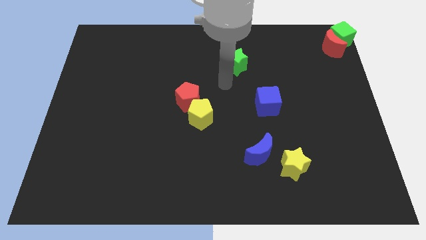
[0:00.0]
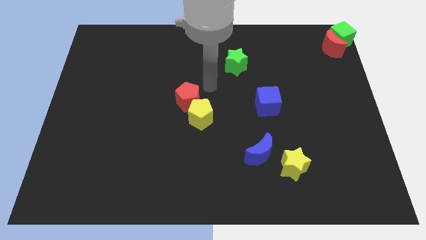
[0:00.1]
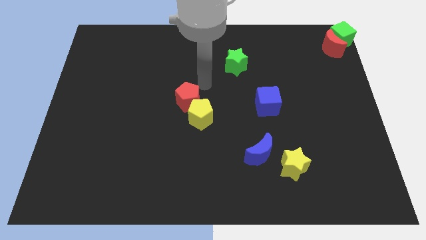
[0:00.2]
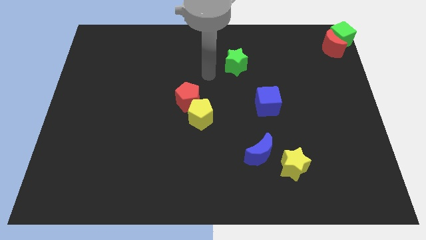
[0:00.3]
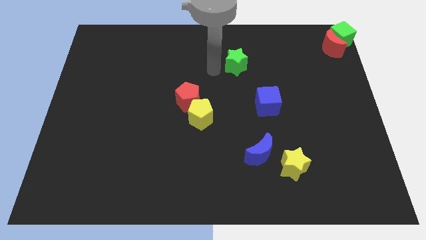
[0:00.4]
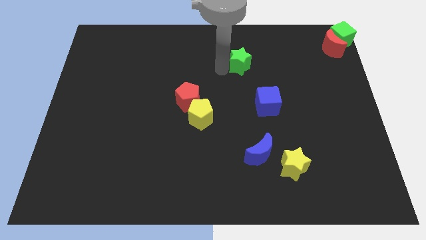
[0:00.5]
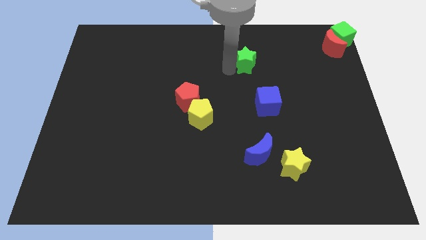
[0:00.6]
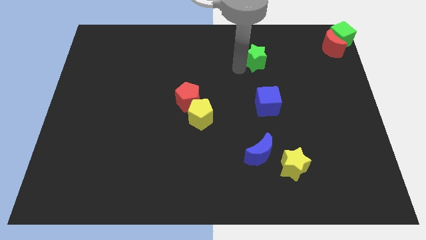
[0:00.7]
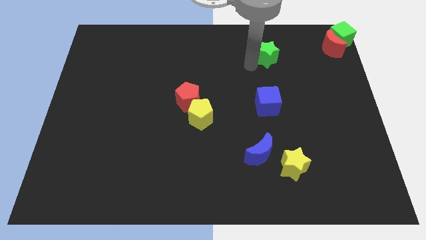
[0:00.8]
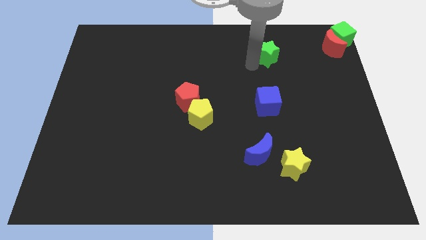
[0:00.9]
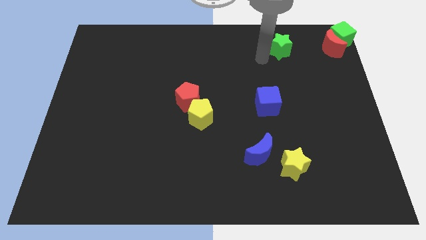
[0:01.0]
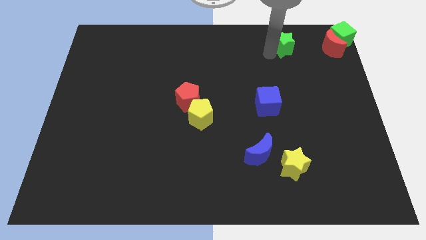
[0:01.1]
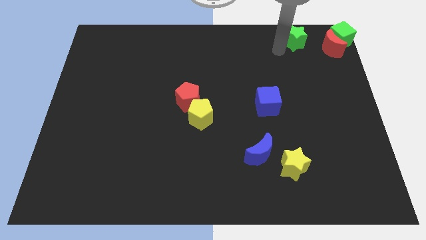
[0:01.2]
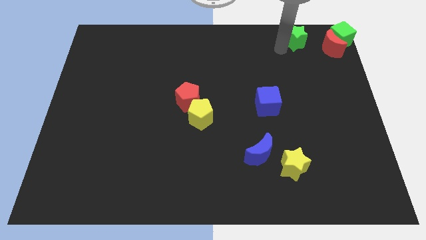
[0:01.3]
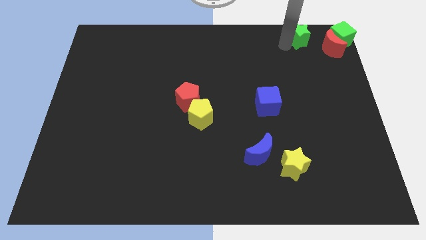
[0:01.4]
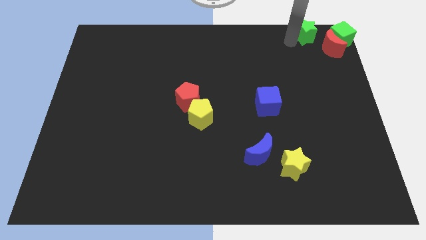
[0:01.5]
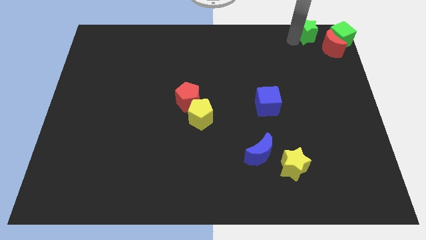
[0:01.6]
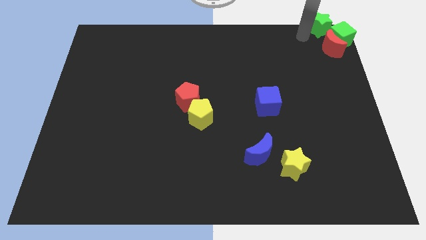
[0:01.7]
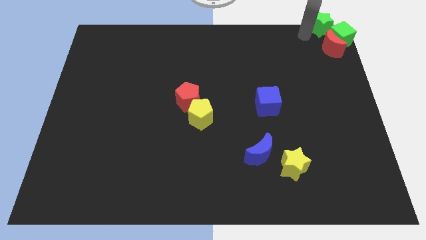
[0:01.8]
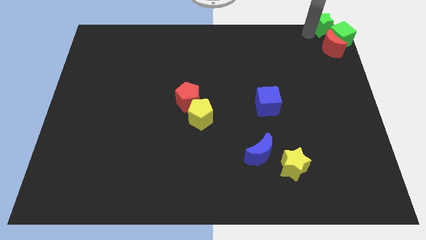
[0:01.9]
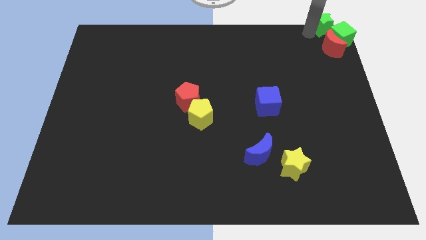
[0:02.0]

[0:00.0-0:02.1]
push the green star to the top right corner

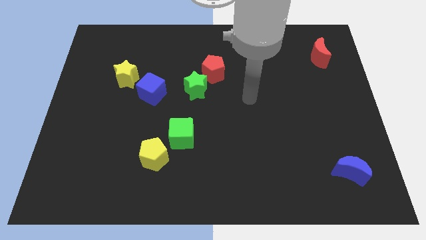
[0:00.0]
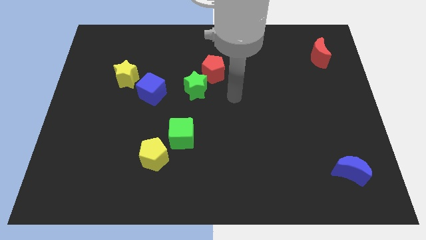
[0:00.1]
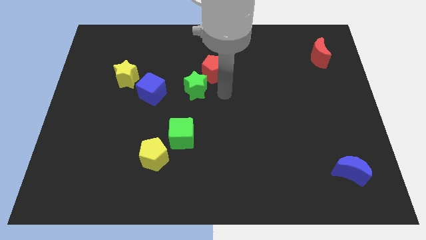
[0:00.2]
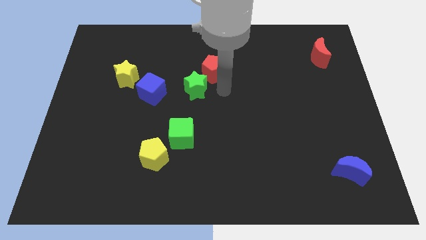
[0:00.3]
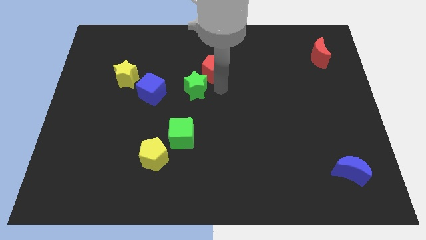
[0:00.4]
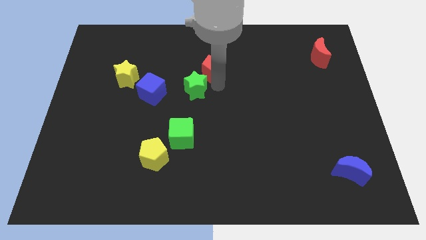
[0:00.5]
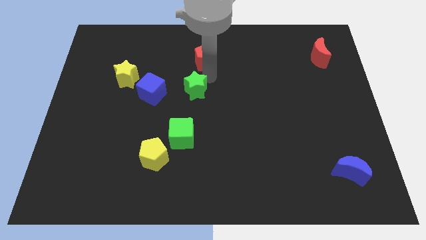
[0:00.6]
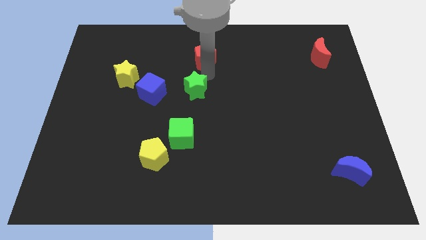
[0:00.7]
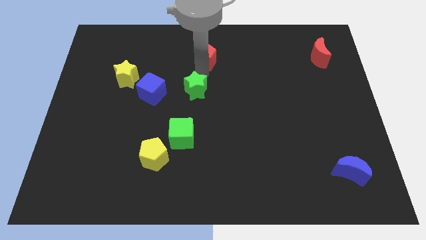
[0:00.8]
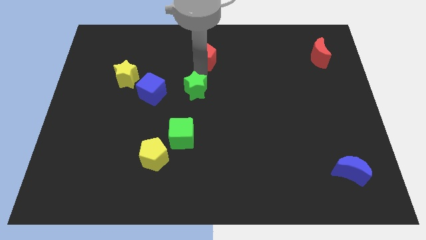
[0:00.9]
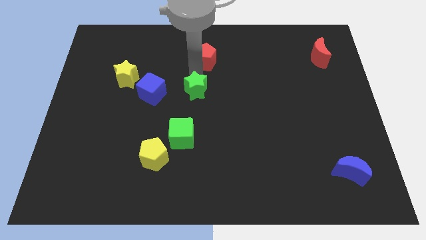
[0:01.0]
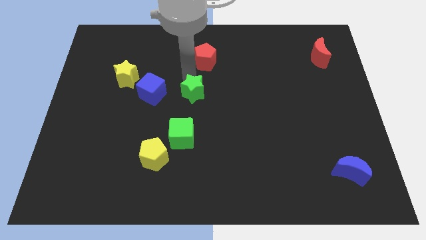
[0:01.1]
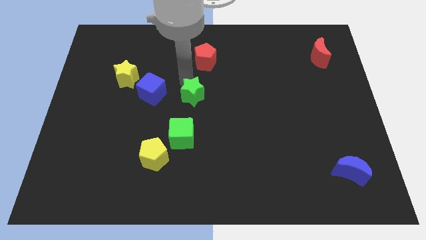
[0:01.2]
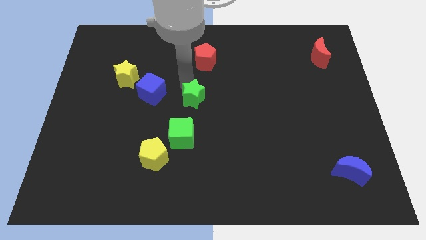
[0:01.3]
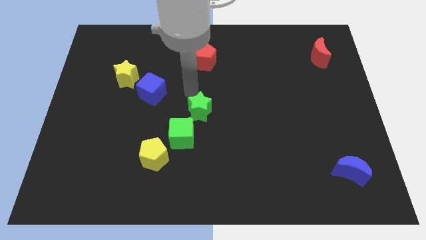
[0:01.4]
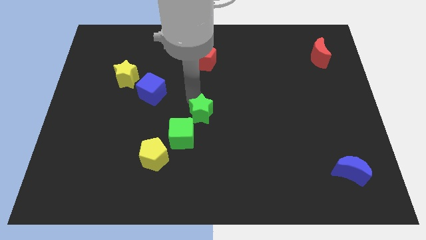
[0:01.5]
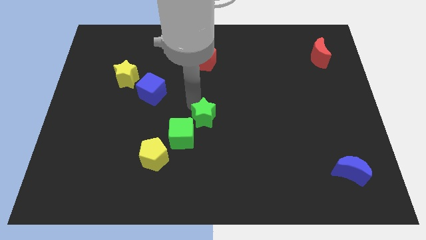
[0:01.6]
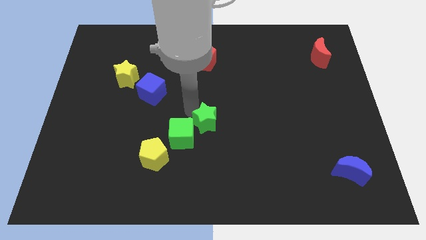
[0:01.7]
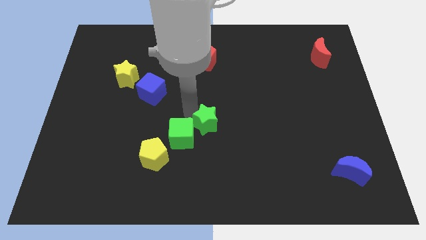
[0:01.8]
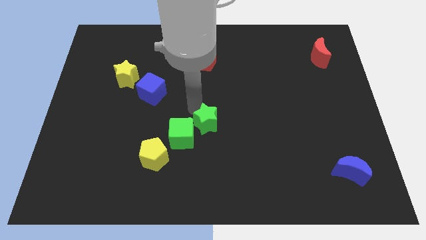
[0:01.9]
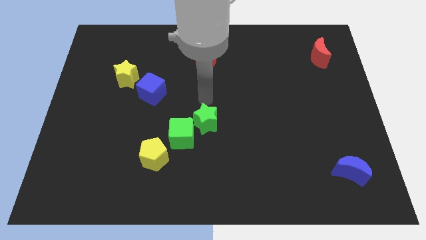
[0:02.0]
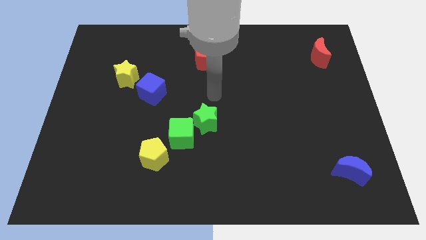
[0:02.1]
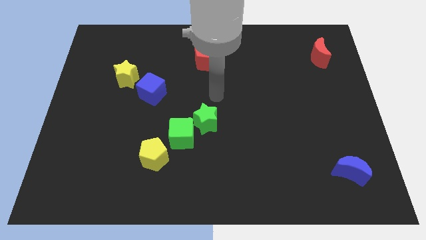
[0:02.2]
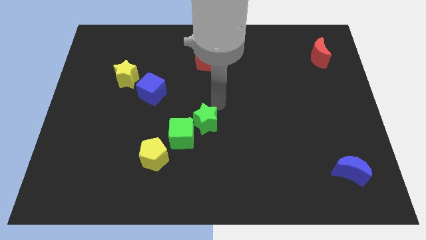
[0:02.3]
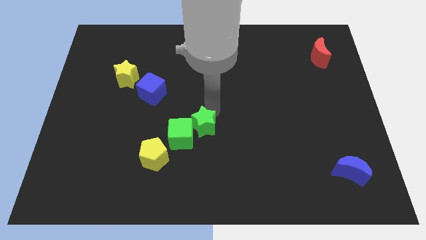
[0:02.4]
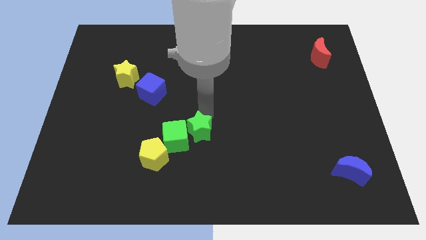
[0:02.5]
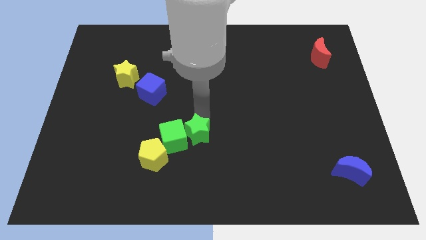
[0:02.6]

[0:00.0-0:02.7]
place the green star right to the green cube

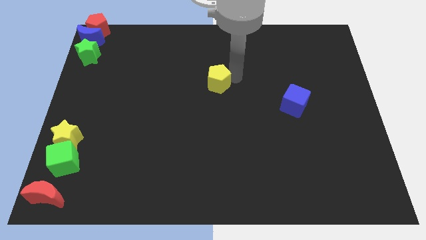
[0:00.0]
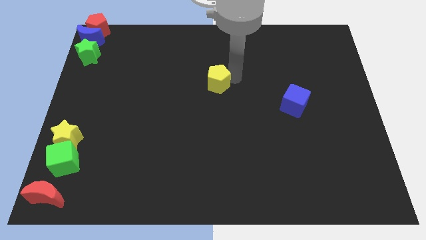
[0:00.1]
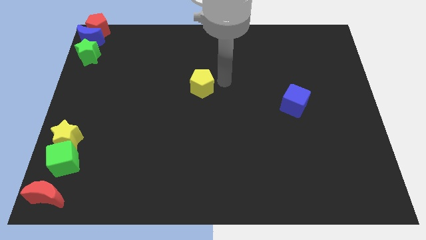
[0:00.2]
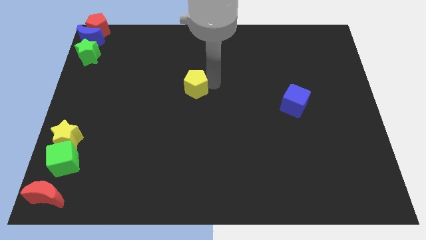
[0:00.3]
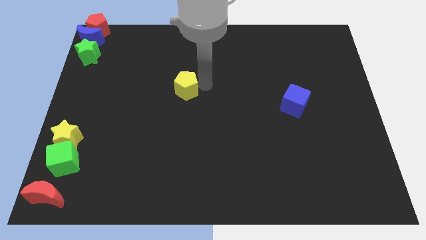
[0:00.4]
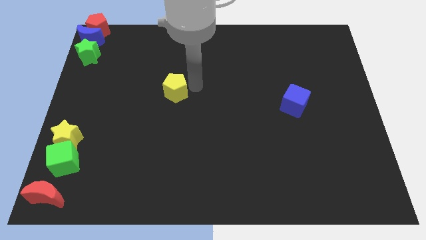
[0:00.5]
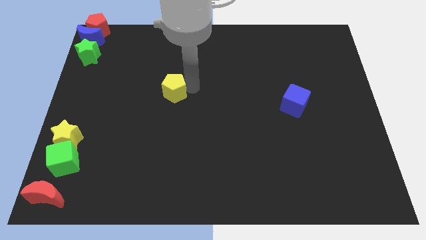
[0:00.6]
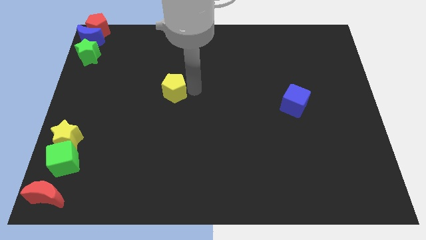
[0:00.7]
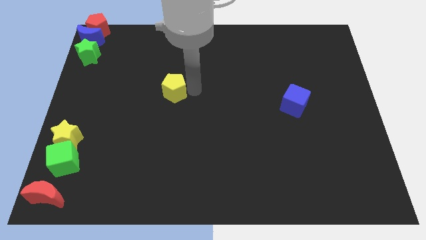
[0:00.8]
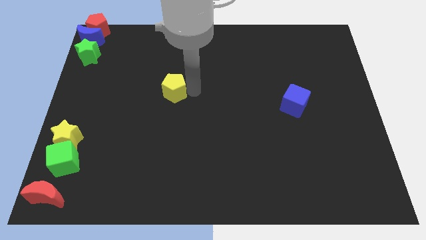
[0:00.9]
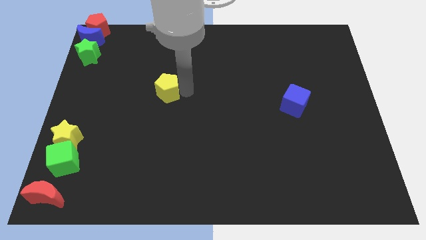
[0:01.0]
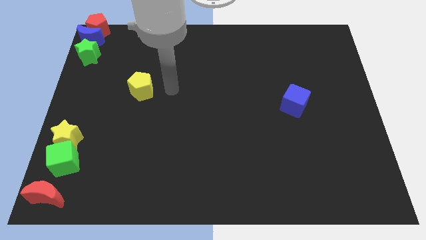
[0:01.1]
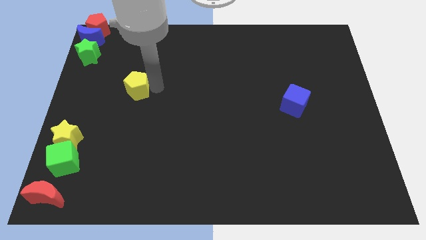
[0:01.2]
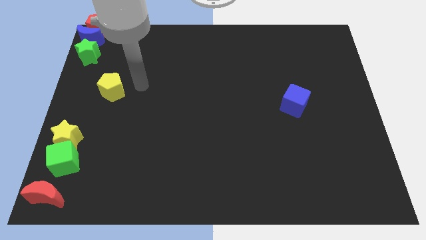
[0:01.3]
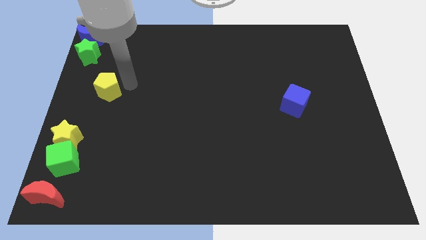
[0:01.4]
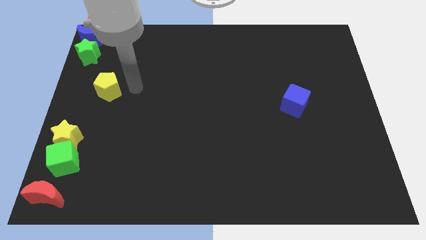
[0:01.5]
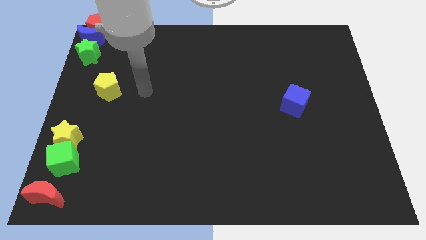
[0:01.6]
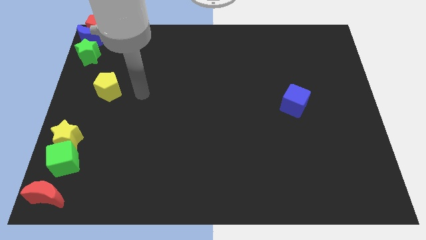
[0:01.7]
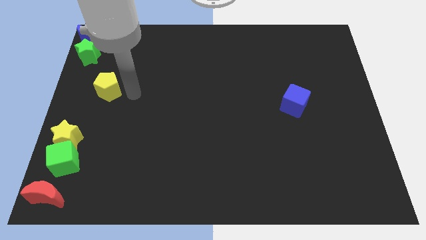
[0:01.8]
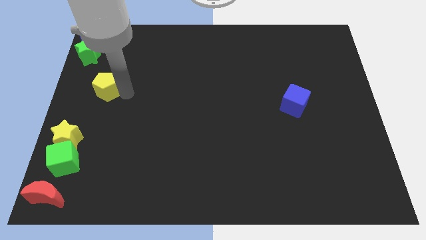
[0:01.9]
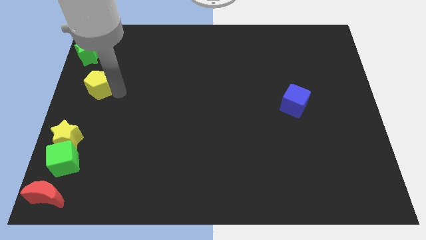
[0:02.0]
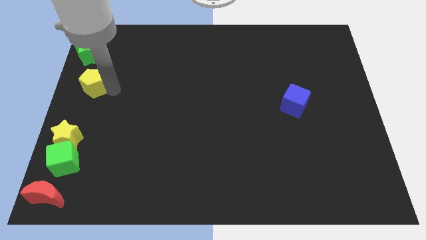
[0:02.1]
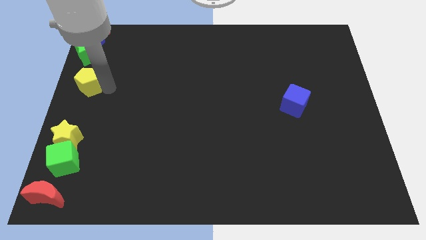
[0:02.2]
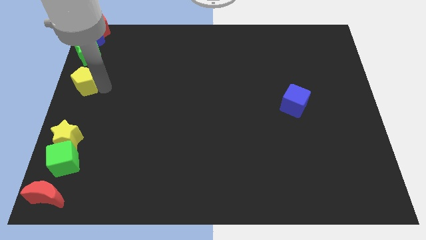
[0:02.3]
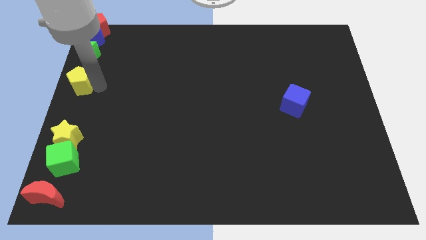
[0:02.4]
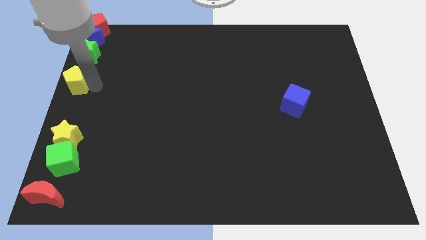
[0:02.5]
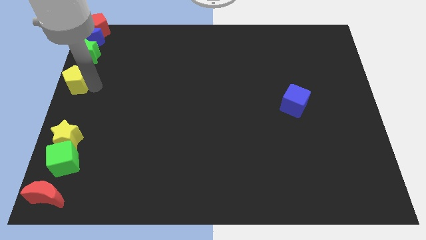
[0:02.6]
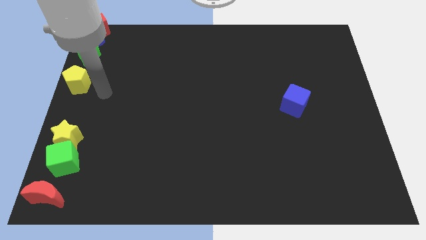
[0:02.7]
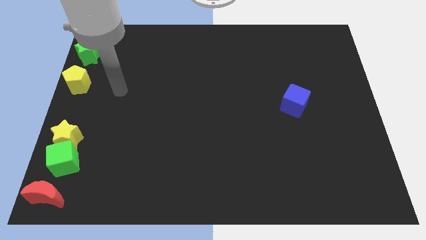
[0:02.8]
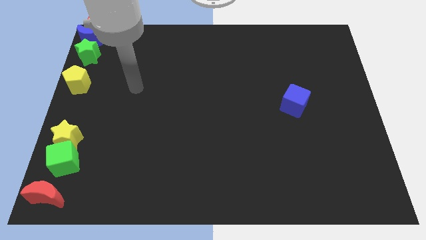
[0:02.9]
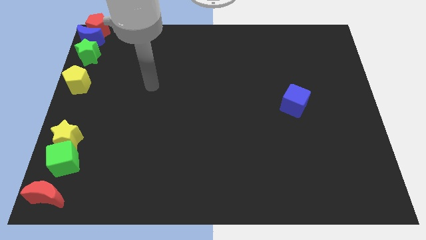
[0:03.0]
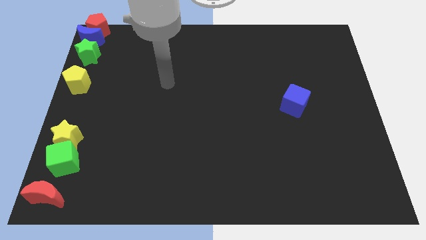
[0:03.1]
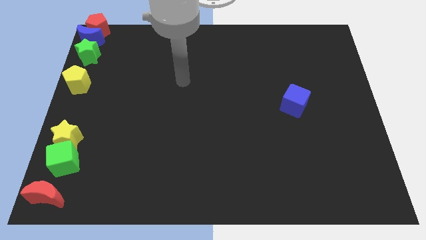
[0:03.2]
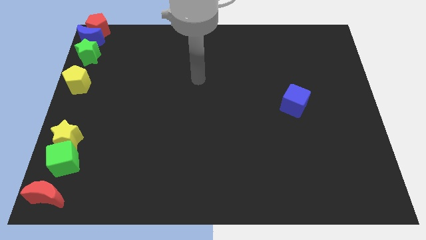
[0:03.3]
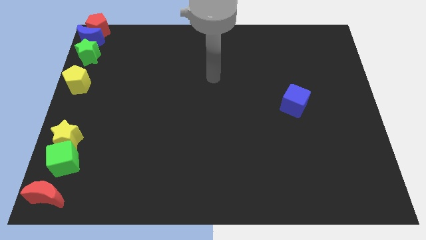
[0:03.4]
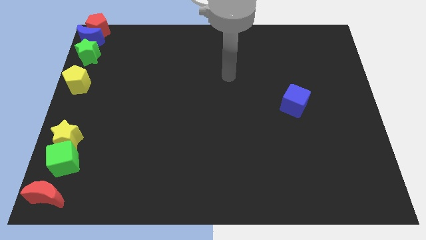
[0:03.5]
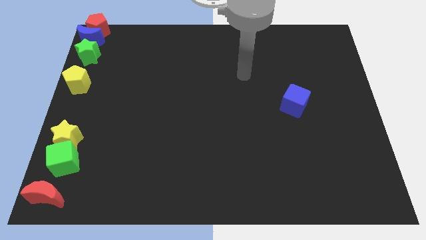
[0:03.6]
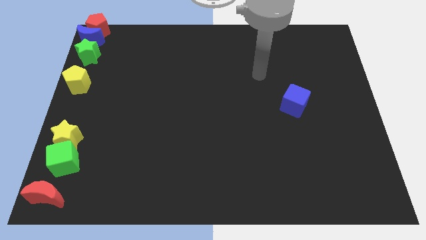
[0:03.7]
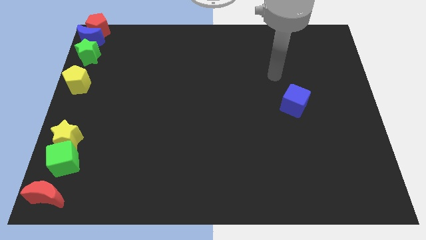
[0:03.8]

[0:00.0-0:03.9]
place the yellow pentagon below the green star

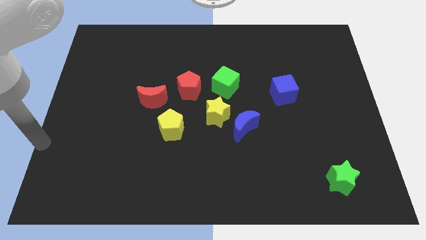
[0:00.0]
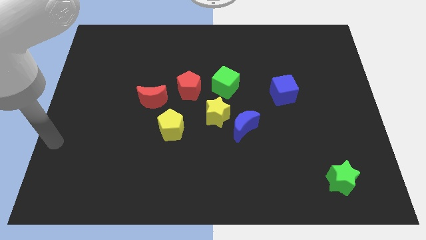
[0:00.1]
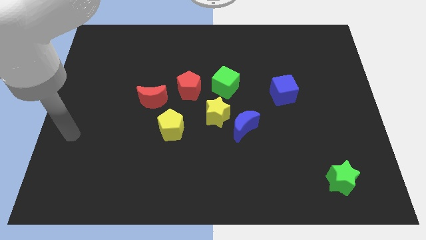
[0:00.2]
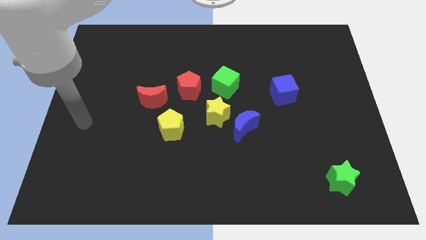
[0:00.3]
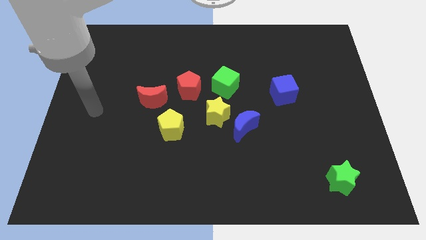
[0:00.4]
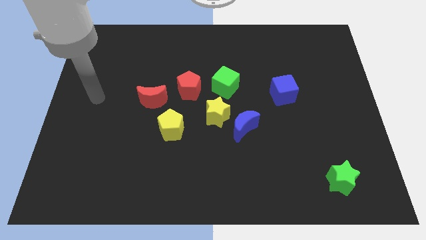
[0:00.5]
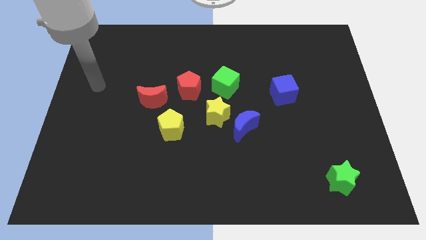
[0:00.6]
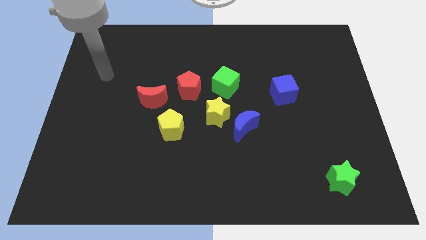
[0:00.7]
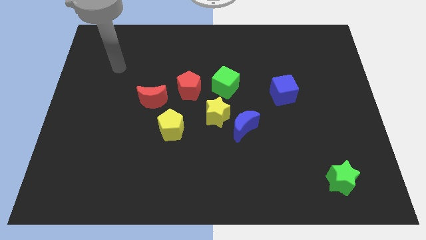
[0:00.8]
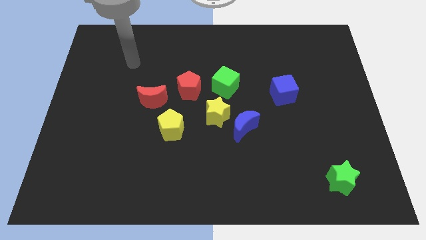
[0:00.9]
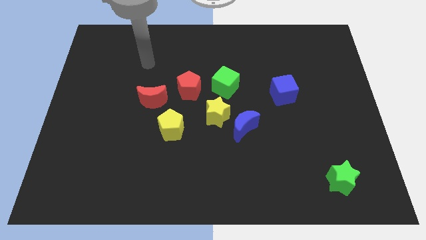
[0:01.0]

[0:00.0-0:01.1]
push arm on the top of red crescent
